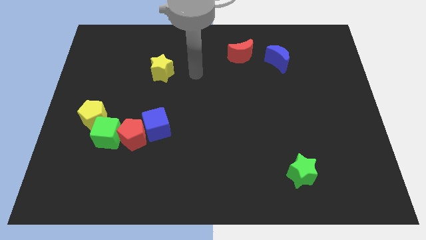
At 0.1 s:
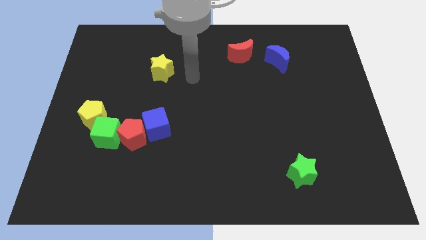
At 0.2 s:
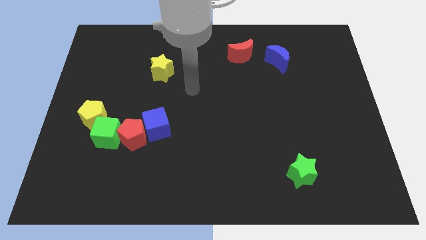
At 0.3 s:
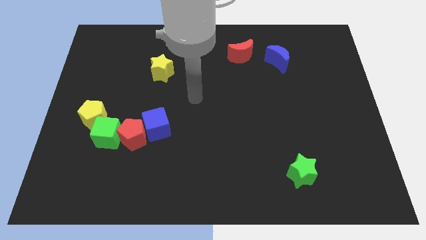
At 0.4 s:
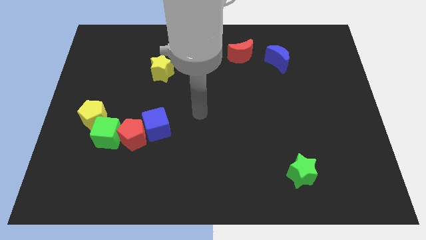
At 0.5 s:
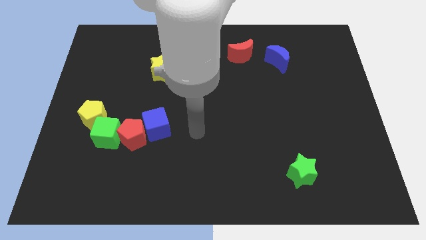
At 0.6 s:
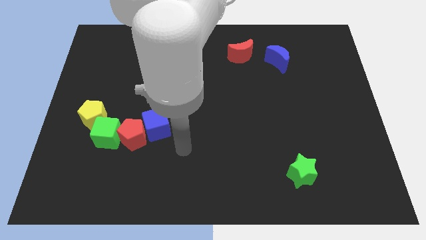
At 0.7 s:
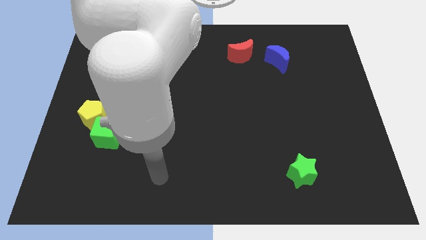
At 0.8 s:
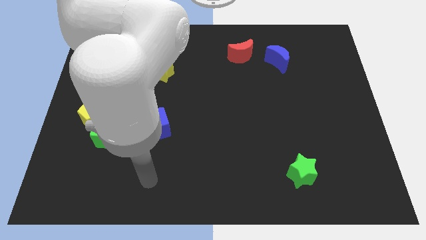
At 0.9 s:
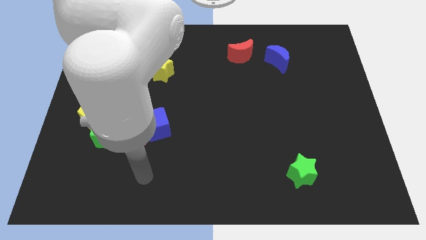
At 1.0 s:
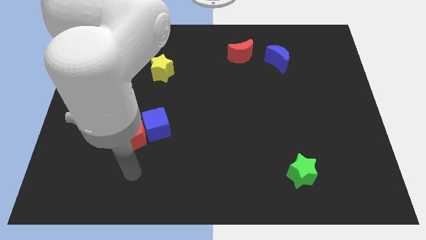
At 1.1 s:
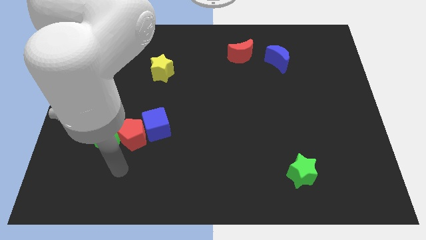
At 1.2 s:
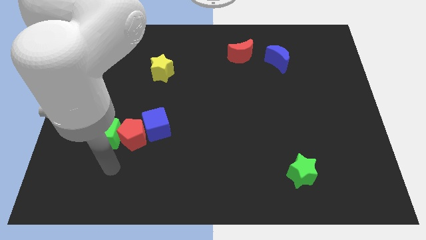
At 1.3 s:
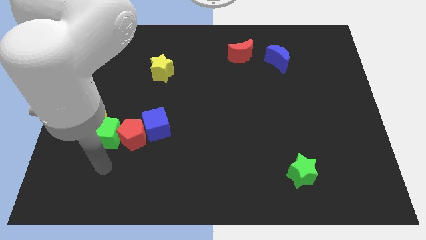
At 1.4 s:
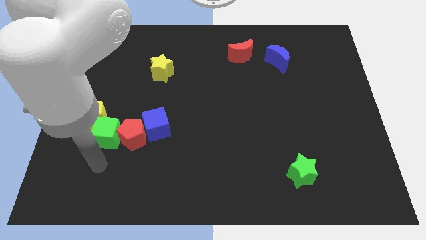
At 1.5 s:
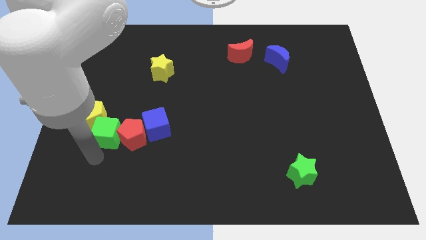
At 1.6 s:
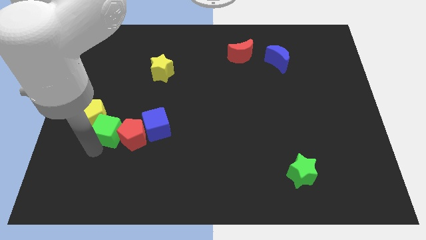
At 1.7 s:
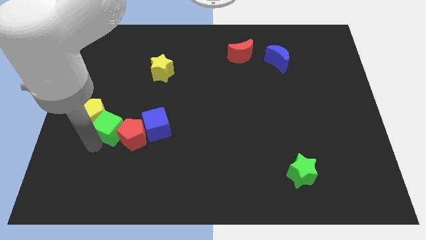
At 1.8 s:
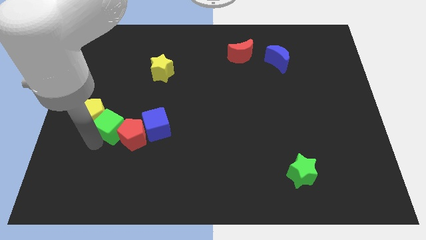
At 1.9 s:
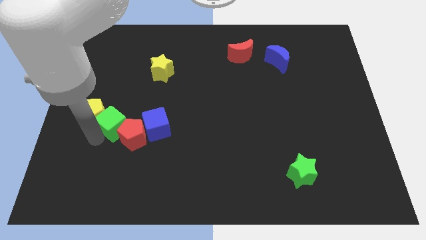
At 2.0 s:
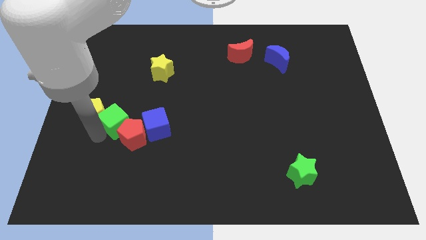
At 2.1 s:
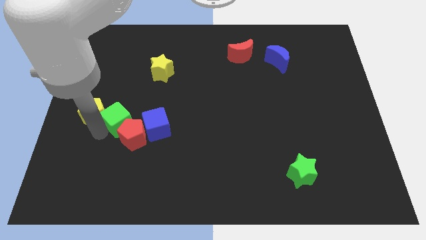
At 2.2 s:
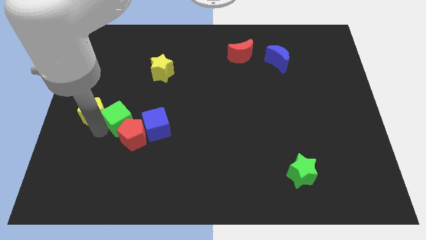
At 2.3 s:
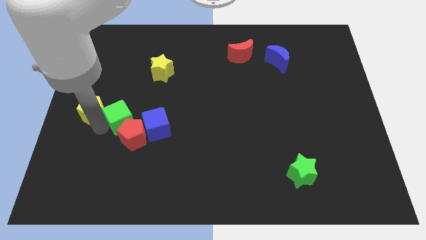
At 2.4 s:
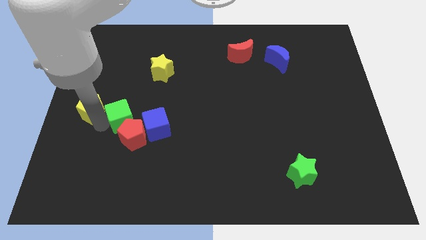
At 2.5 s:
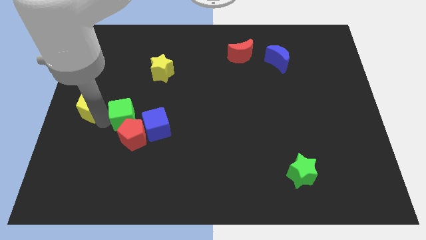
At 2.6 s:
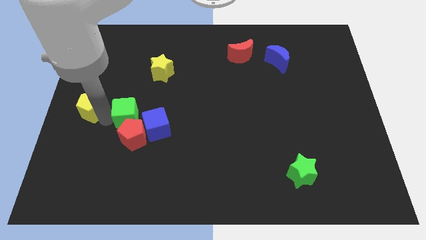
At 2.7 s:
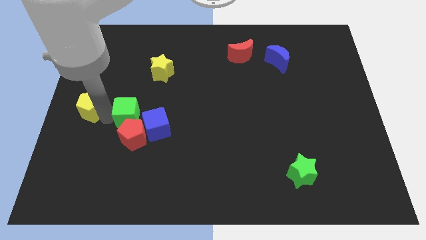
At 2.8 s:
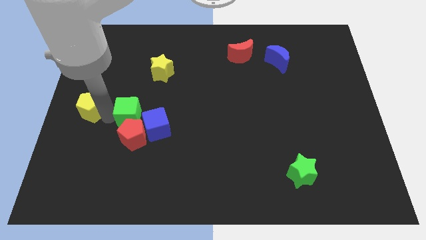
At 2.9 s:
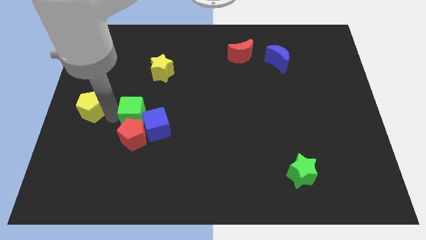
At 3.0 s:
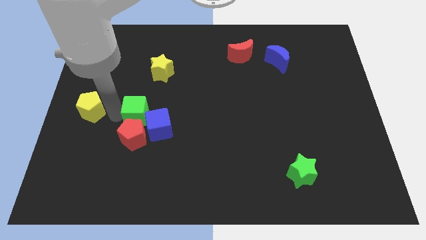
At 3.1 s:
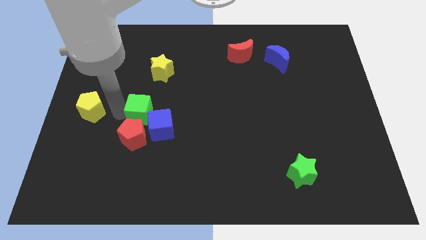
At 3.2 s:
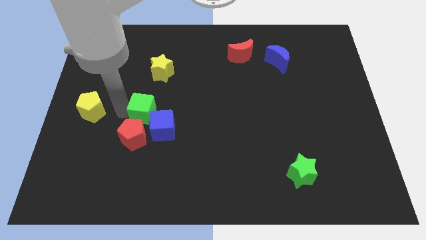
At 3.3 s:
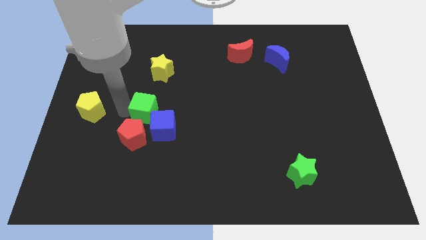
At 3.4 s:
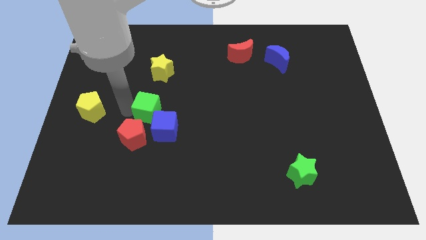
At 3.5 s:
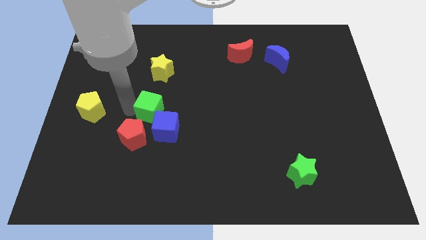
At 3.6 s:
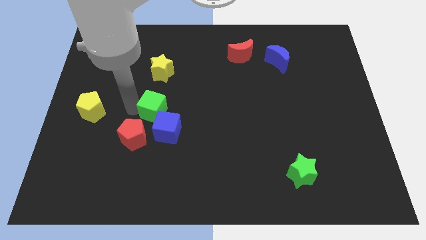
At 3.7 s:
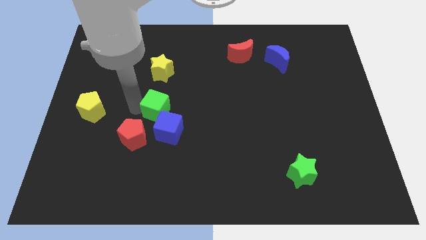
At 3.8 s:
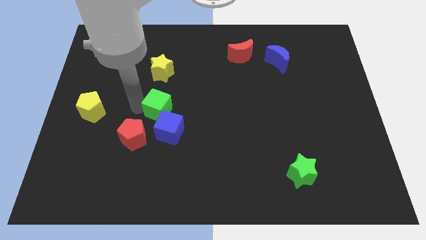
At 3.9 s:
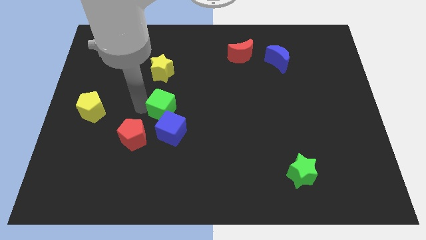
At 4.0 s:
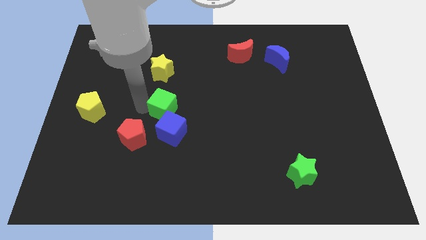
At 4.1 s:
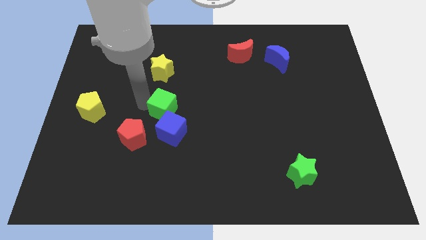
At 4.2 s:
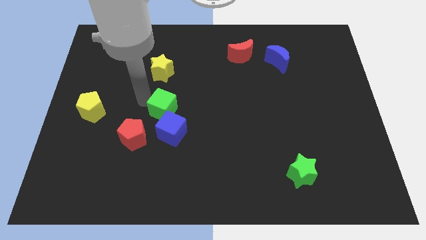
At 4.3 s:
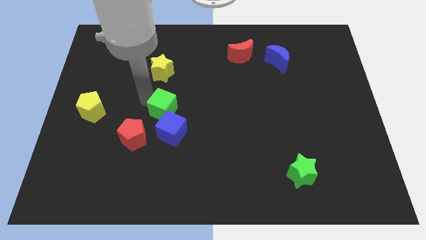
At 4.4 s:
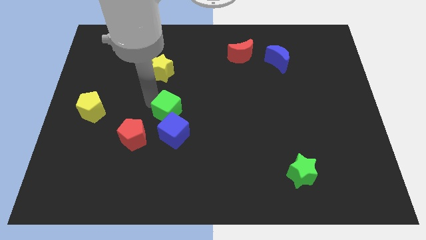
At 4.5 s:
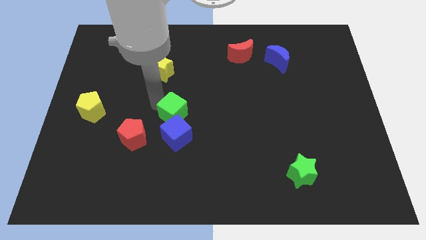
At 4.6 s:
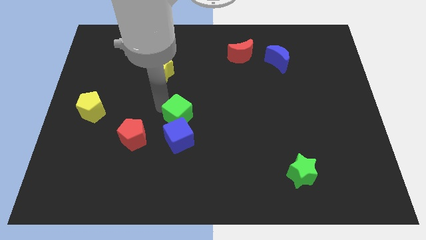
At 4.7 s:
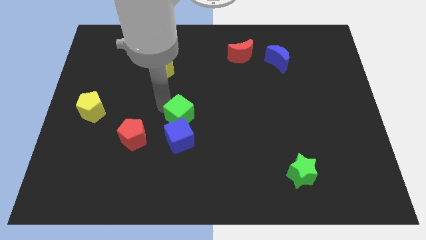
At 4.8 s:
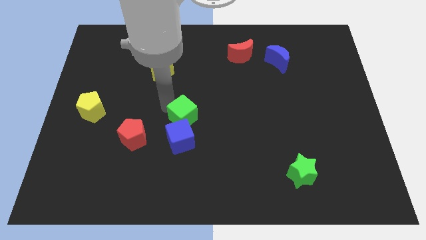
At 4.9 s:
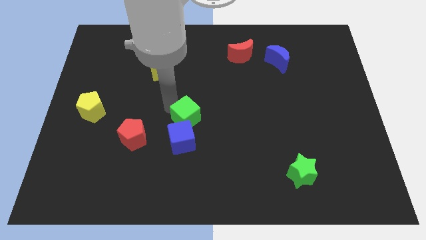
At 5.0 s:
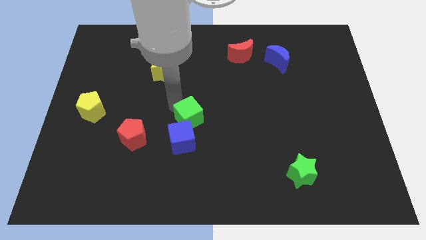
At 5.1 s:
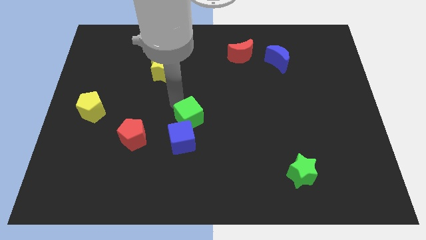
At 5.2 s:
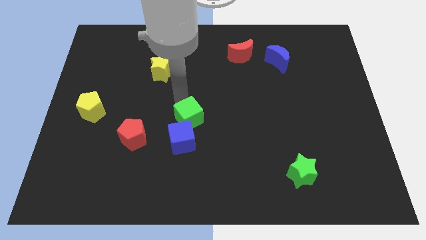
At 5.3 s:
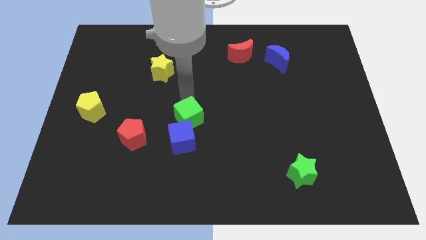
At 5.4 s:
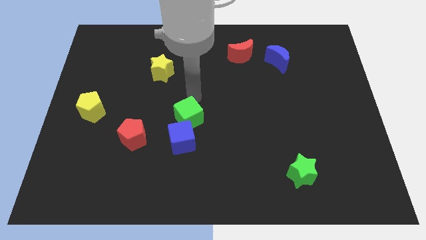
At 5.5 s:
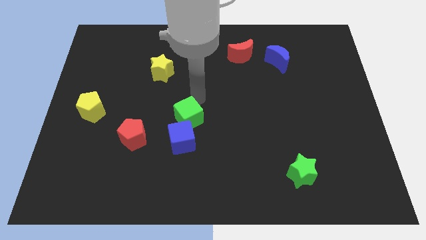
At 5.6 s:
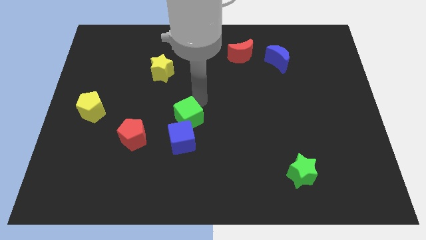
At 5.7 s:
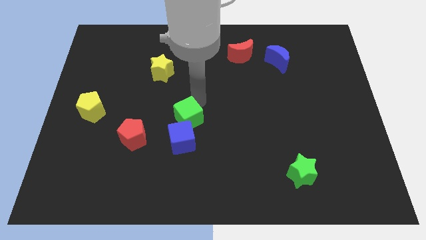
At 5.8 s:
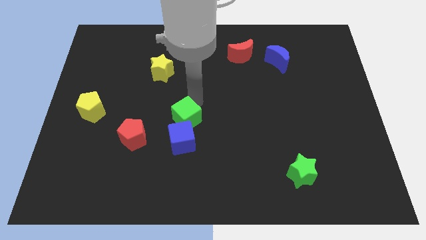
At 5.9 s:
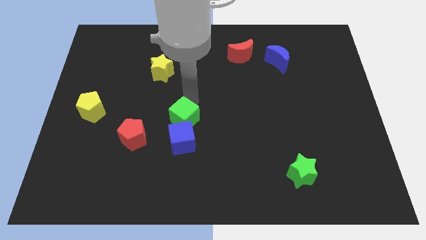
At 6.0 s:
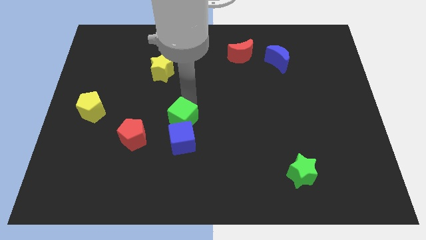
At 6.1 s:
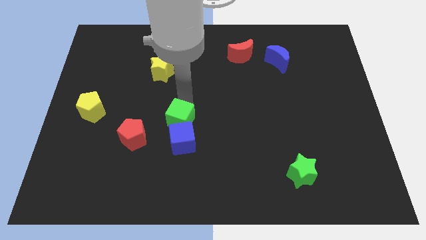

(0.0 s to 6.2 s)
push the green cube next to the blue cube

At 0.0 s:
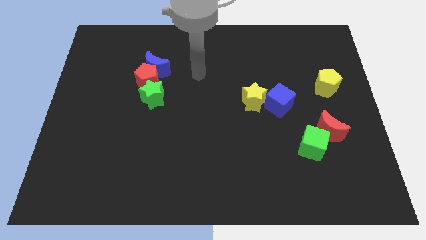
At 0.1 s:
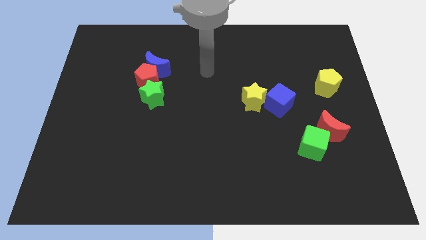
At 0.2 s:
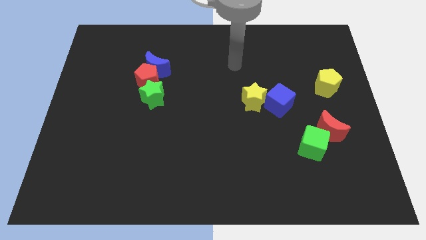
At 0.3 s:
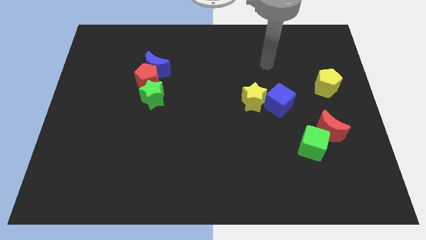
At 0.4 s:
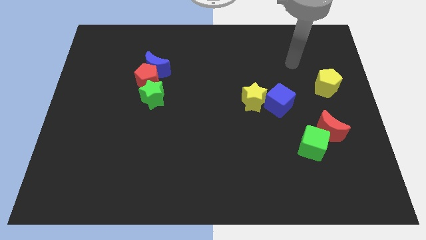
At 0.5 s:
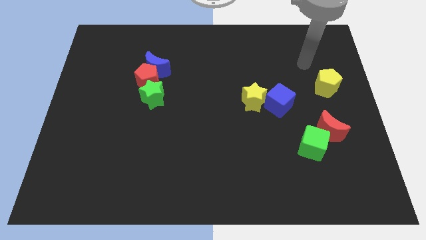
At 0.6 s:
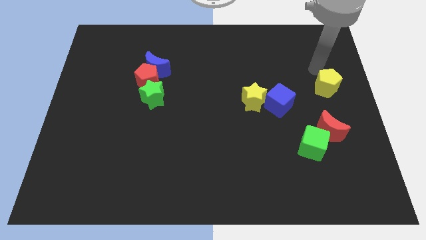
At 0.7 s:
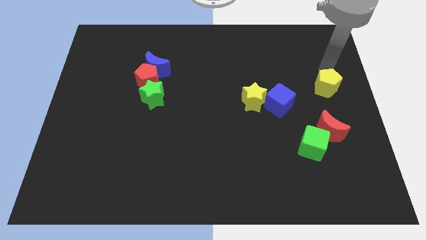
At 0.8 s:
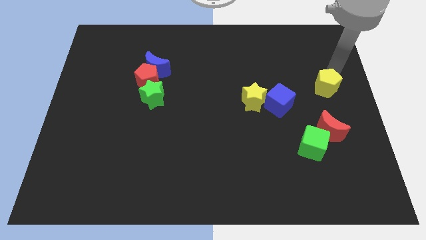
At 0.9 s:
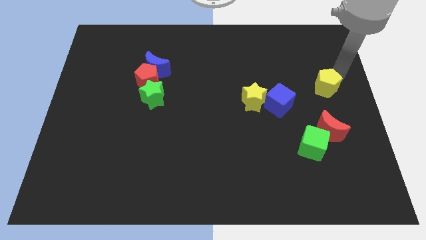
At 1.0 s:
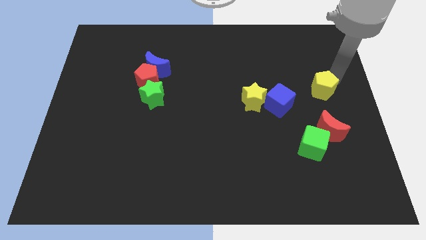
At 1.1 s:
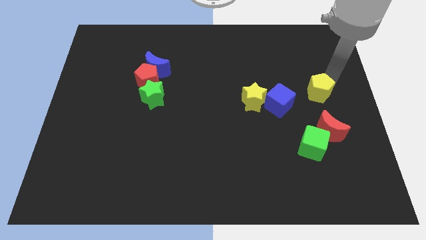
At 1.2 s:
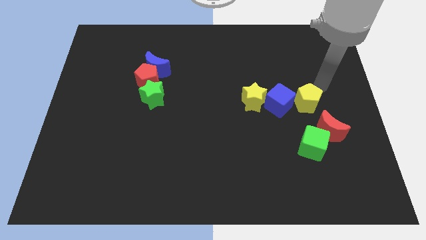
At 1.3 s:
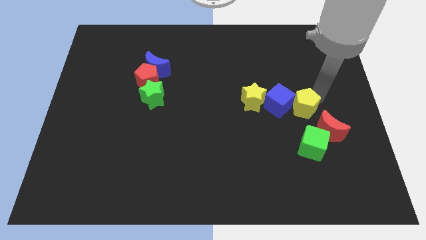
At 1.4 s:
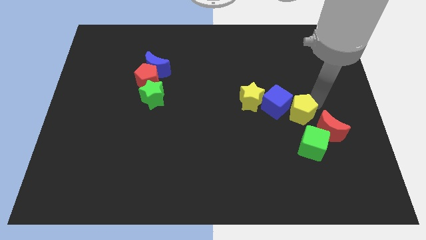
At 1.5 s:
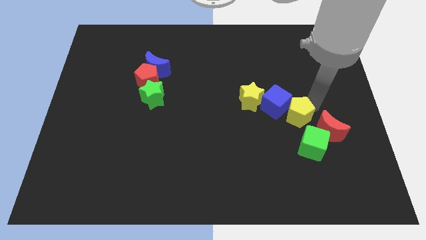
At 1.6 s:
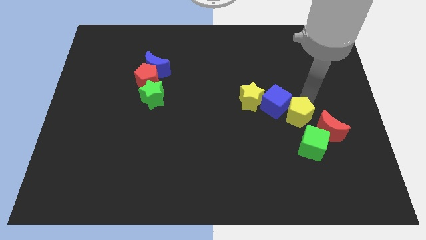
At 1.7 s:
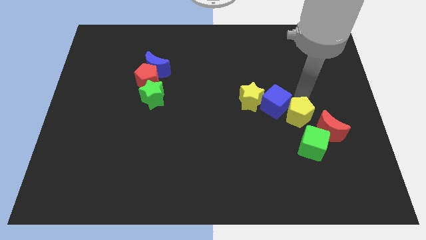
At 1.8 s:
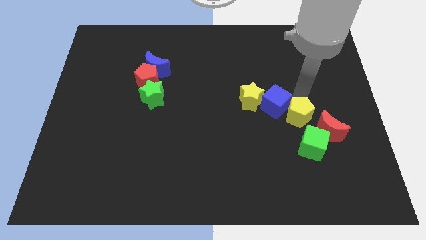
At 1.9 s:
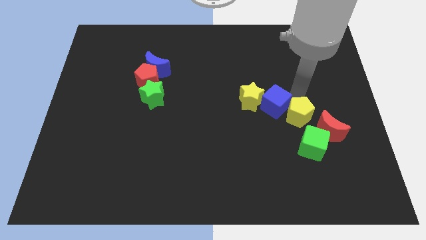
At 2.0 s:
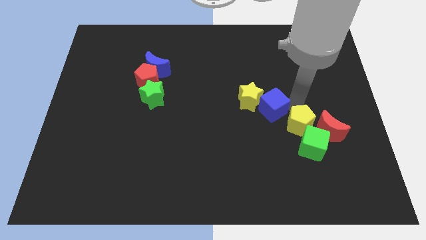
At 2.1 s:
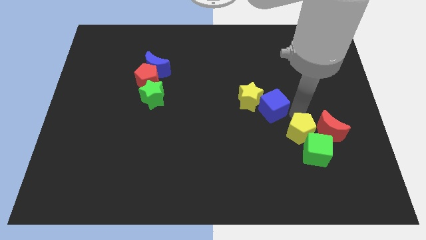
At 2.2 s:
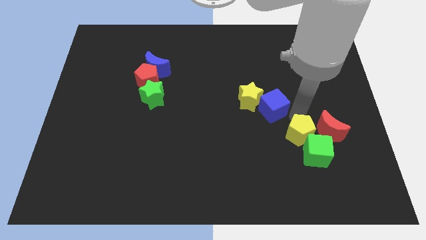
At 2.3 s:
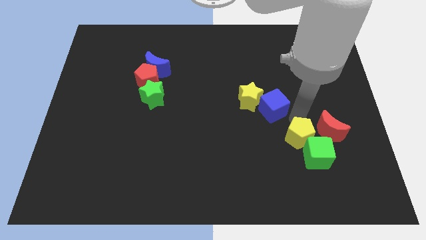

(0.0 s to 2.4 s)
slide the yellow pentagon next to the green cube
